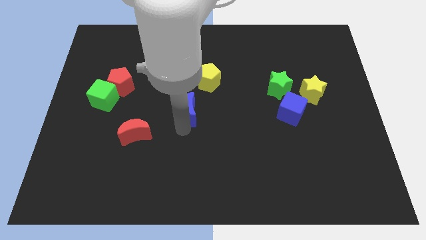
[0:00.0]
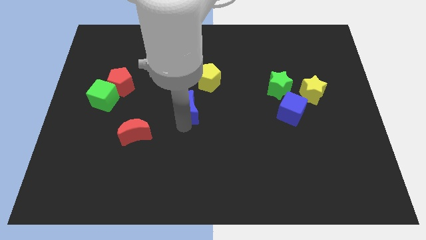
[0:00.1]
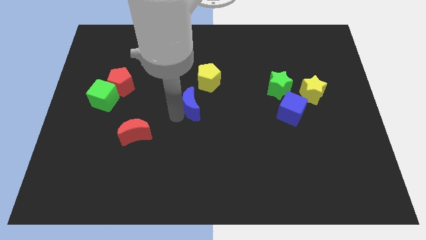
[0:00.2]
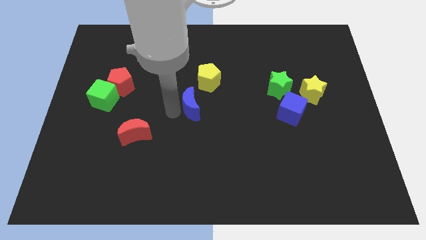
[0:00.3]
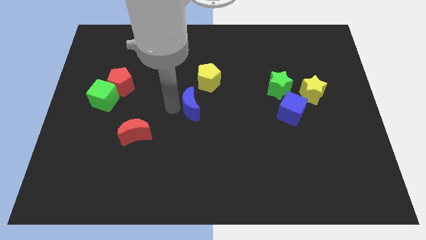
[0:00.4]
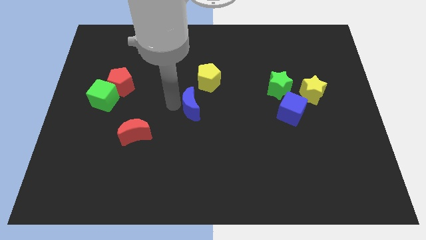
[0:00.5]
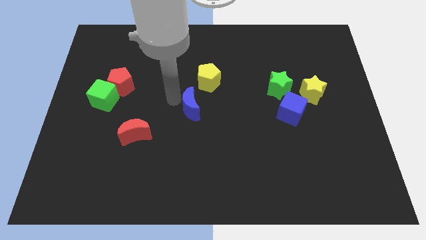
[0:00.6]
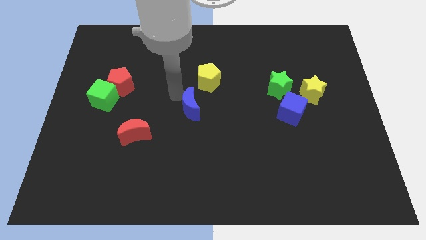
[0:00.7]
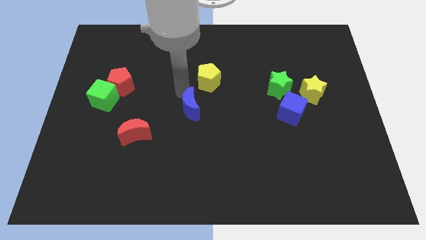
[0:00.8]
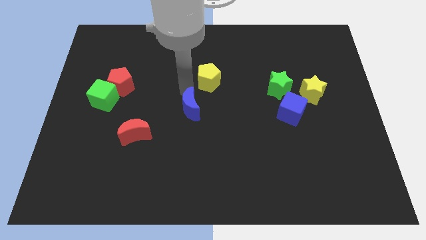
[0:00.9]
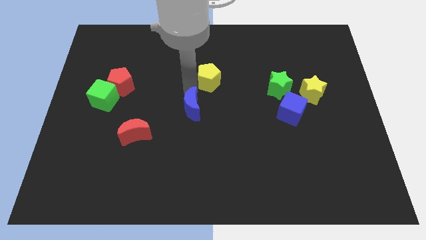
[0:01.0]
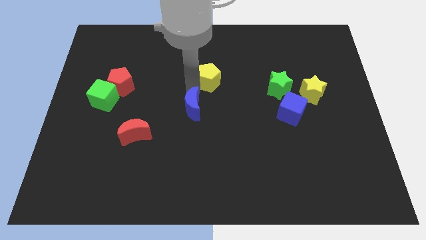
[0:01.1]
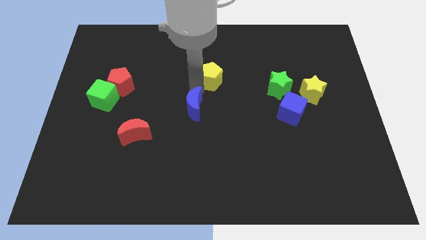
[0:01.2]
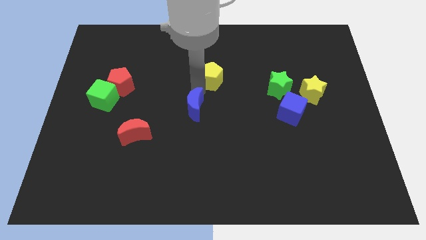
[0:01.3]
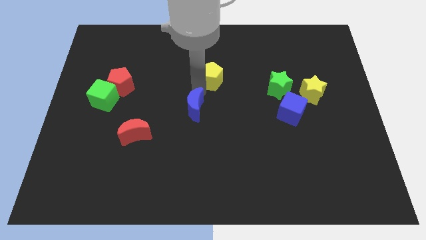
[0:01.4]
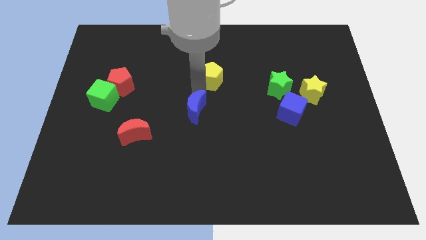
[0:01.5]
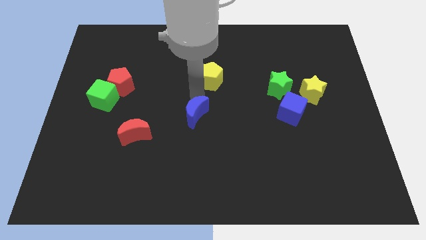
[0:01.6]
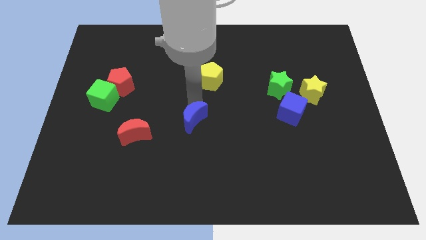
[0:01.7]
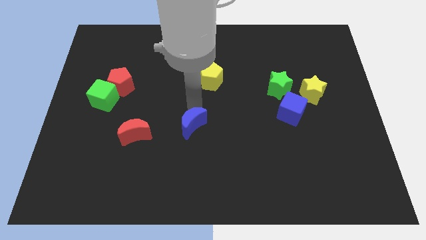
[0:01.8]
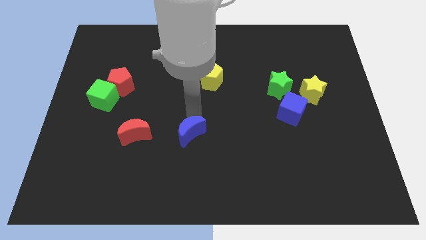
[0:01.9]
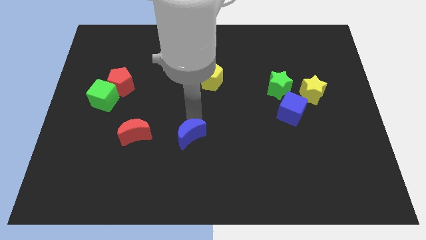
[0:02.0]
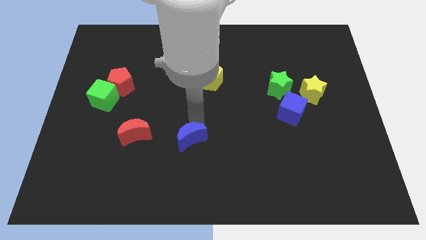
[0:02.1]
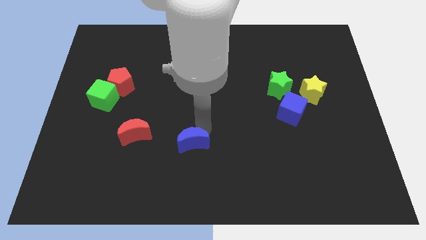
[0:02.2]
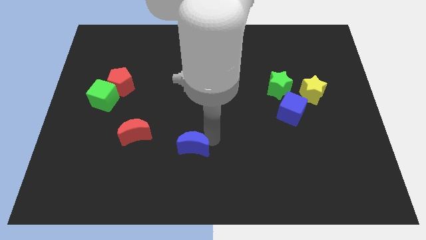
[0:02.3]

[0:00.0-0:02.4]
drag the blue moon to the bottom side of the board

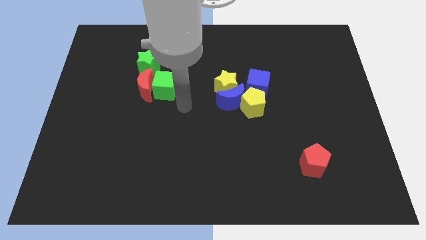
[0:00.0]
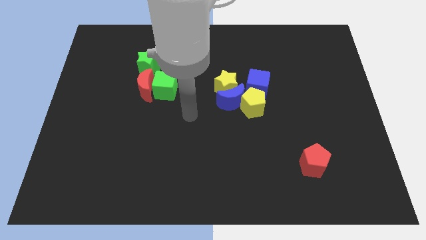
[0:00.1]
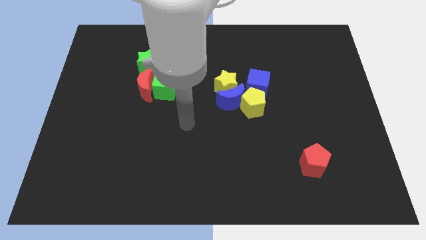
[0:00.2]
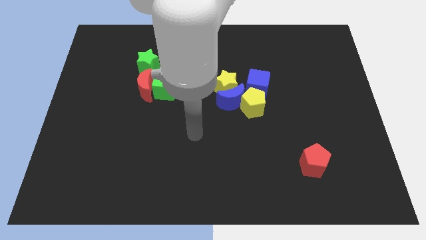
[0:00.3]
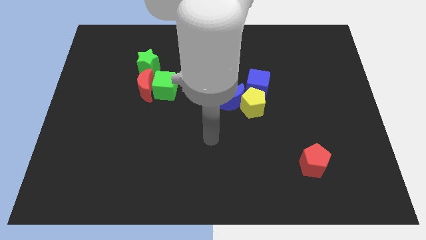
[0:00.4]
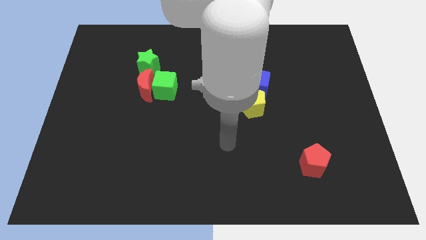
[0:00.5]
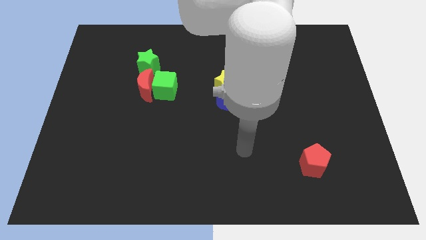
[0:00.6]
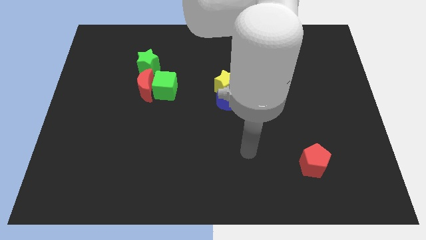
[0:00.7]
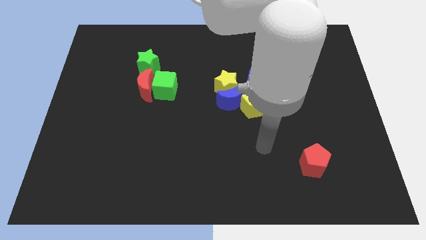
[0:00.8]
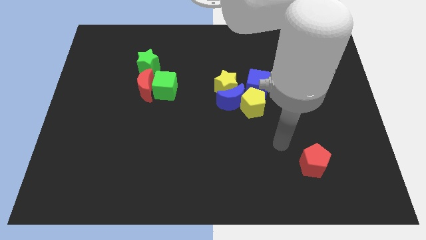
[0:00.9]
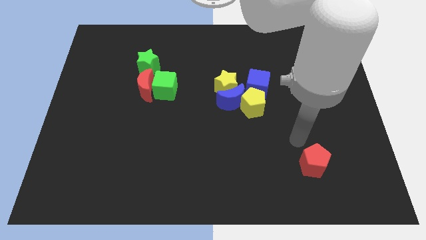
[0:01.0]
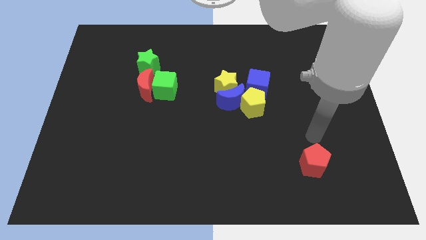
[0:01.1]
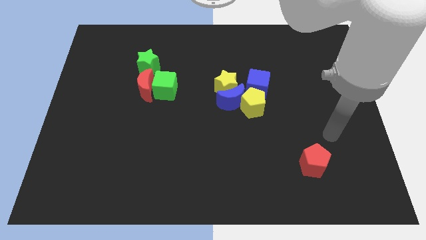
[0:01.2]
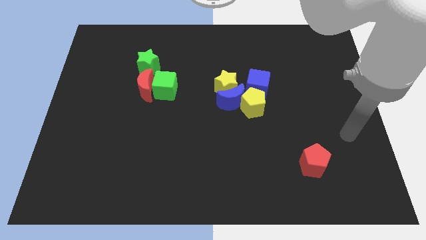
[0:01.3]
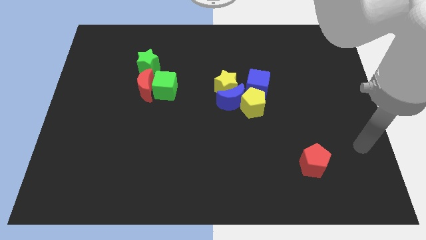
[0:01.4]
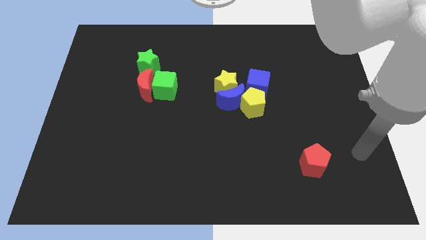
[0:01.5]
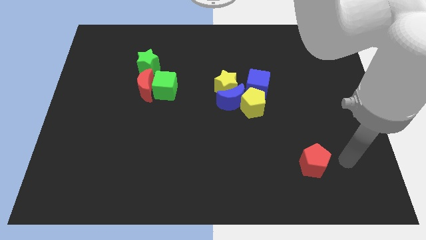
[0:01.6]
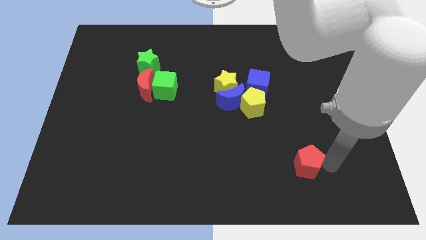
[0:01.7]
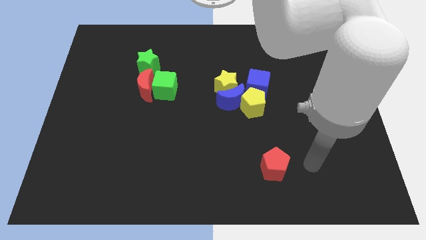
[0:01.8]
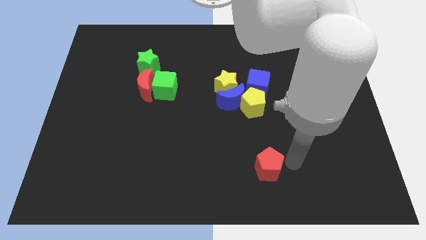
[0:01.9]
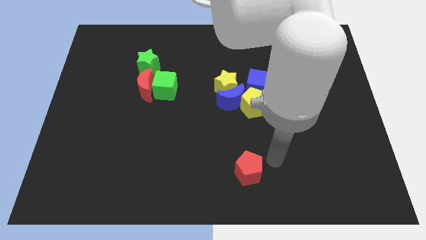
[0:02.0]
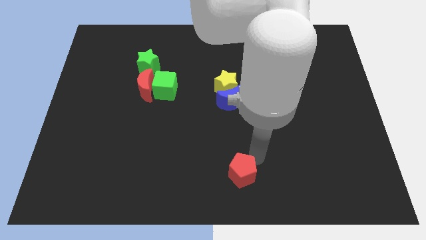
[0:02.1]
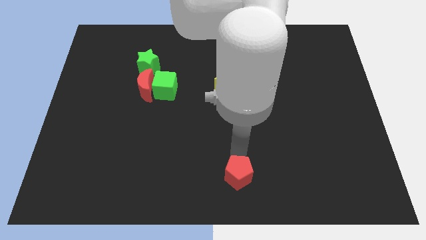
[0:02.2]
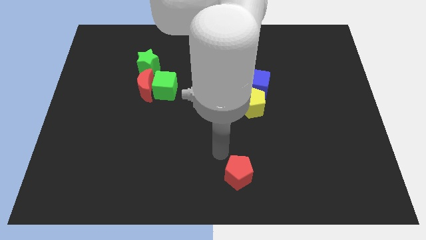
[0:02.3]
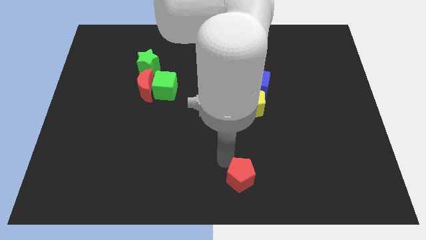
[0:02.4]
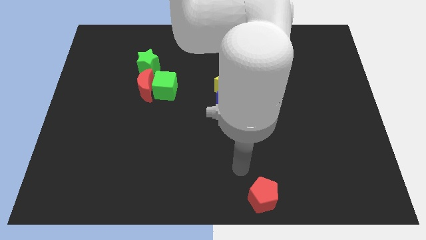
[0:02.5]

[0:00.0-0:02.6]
move the red pentagon towards the bottom of the board

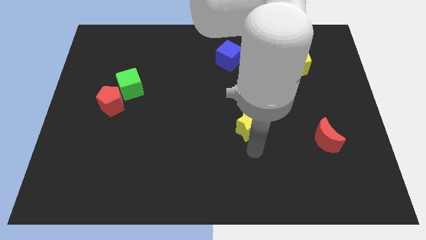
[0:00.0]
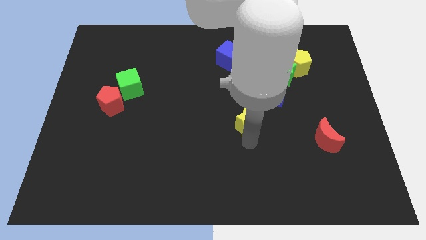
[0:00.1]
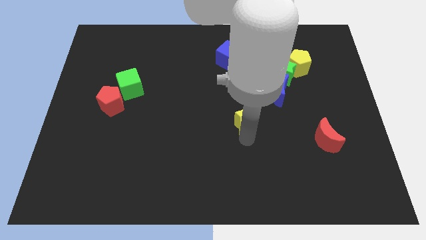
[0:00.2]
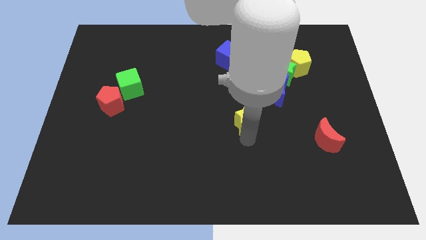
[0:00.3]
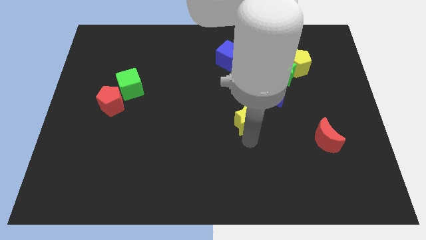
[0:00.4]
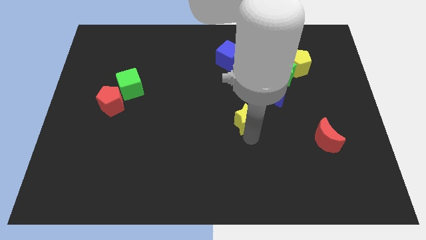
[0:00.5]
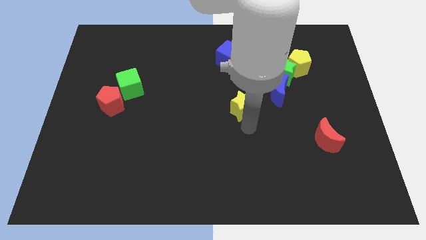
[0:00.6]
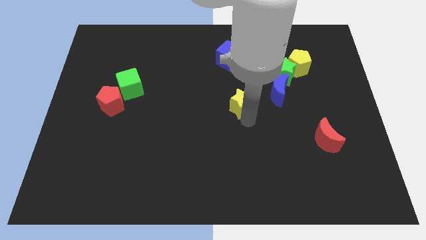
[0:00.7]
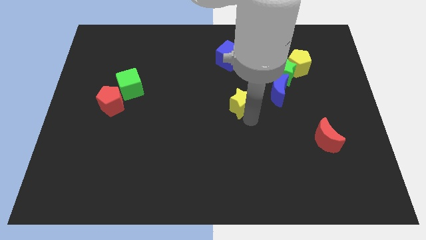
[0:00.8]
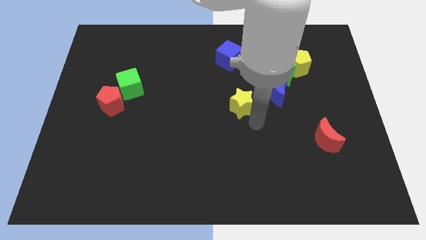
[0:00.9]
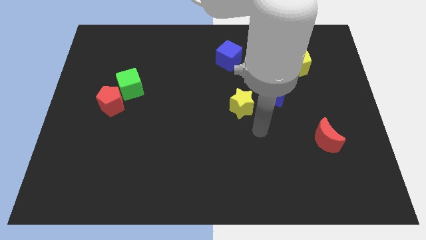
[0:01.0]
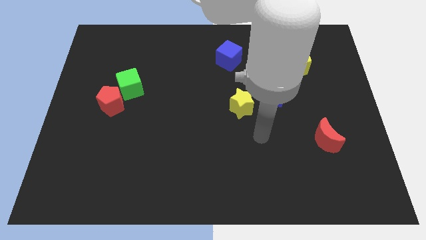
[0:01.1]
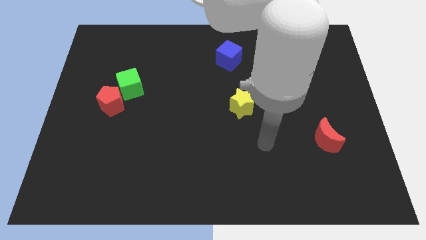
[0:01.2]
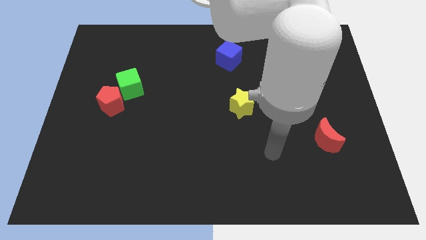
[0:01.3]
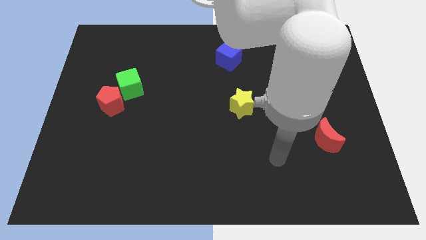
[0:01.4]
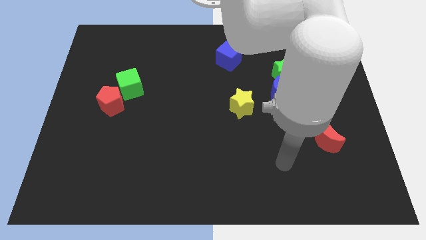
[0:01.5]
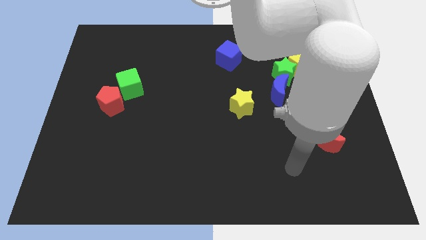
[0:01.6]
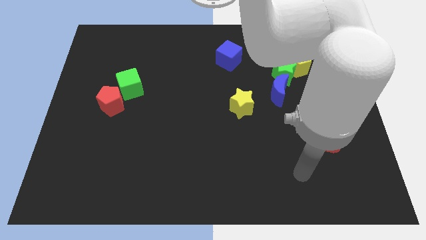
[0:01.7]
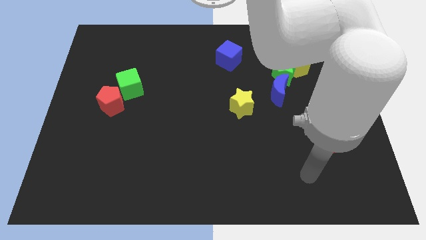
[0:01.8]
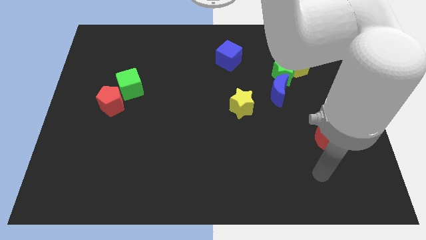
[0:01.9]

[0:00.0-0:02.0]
push the yellow star towards the center of the board

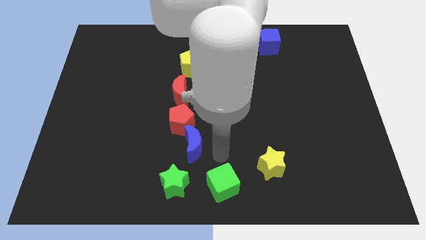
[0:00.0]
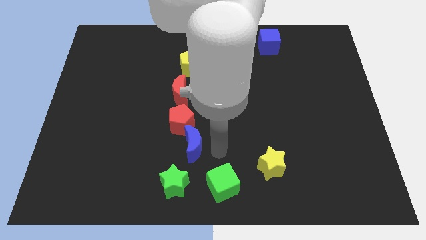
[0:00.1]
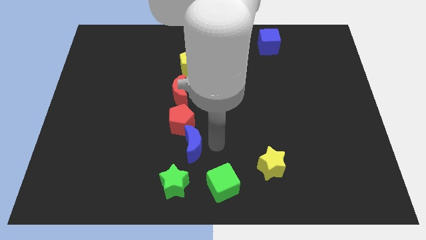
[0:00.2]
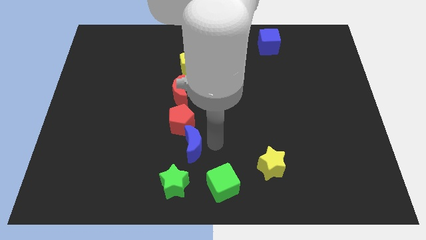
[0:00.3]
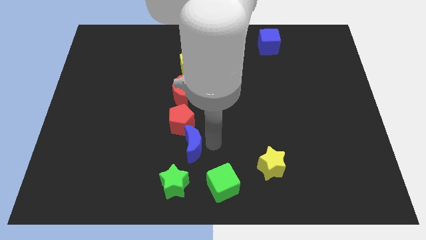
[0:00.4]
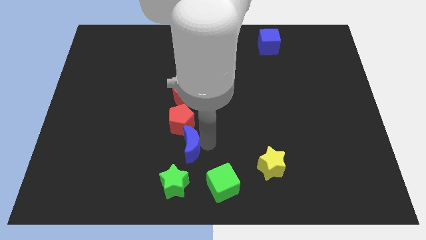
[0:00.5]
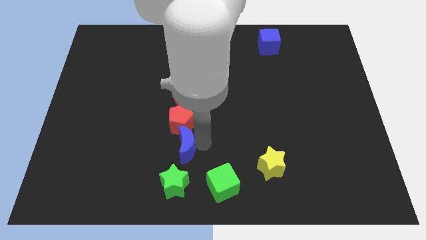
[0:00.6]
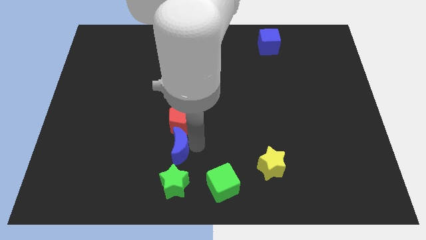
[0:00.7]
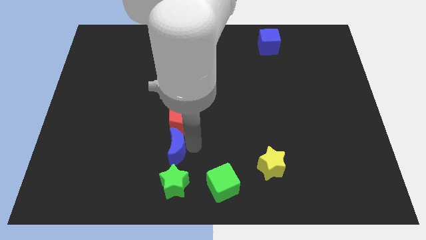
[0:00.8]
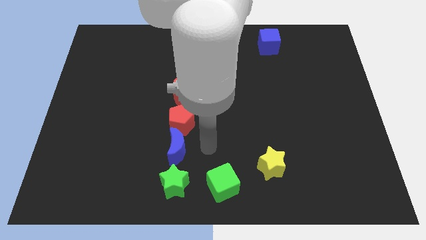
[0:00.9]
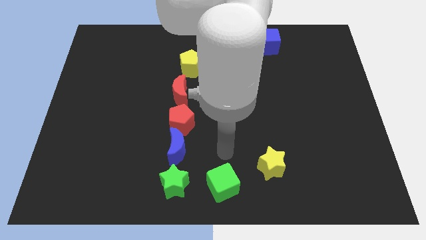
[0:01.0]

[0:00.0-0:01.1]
push the blue moon to the bottom side of the red pentagon

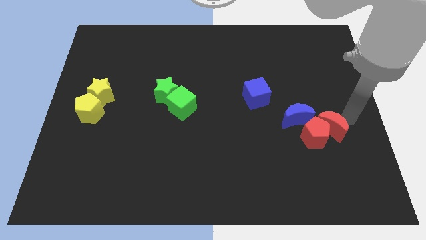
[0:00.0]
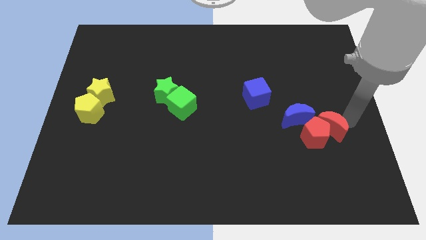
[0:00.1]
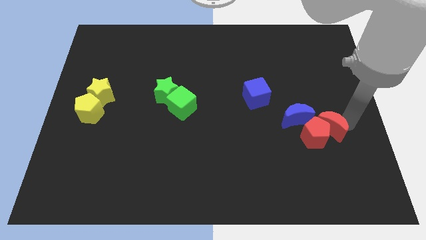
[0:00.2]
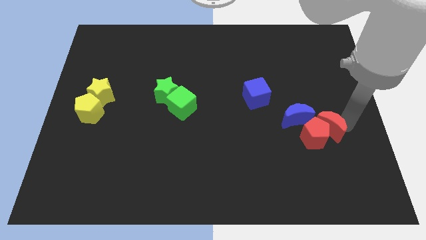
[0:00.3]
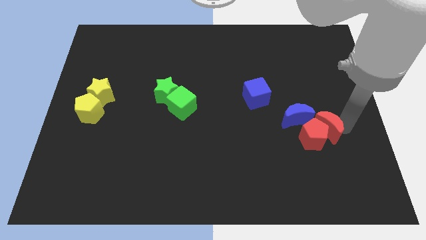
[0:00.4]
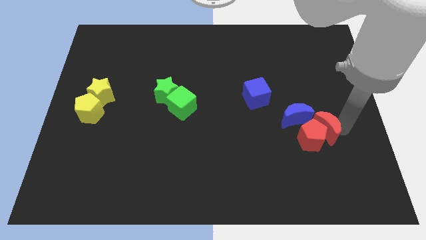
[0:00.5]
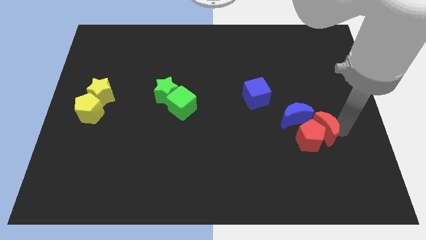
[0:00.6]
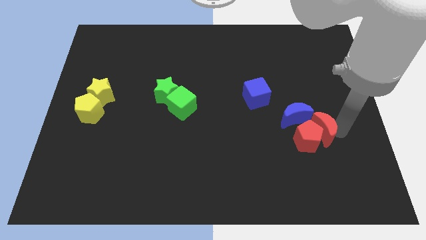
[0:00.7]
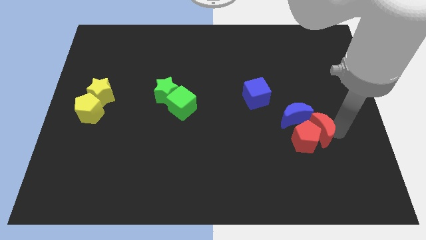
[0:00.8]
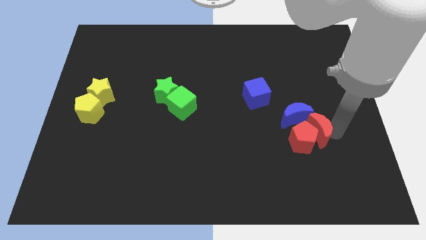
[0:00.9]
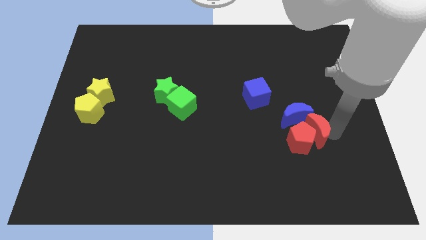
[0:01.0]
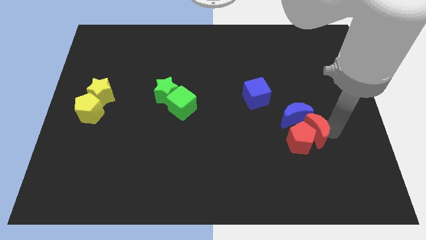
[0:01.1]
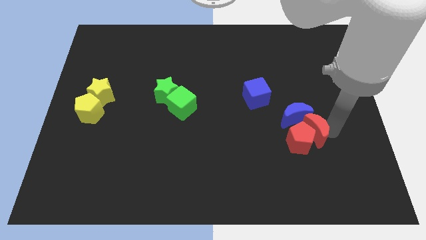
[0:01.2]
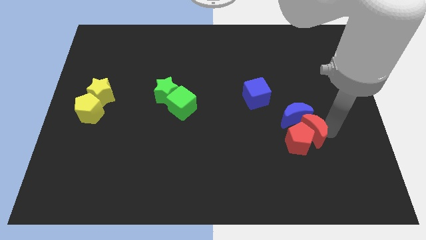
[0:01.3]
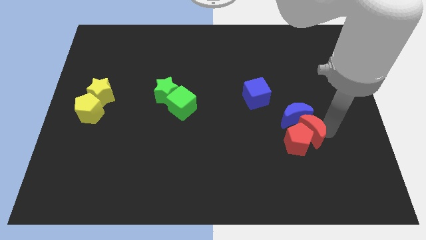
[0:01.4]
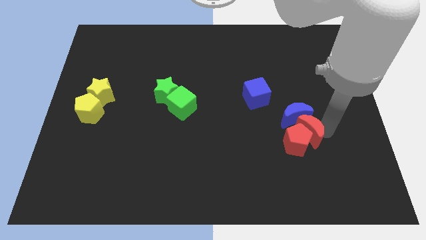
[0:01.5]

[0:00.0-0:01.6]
move red moon in to red pentagon
